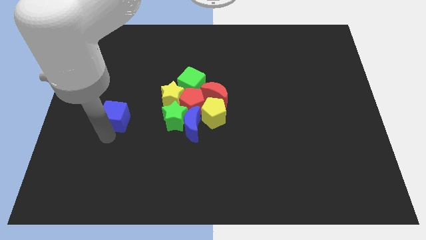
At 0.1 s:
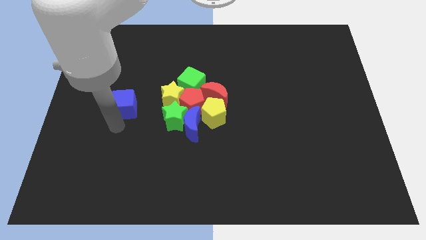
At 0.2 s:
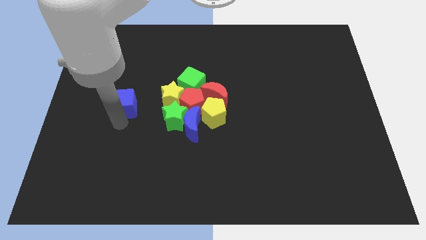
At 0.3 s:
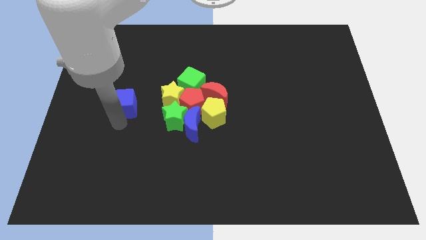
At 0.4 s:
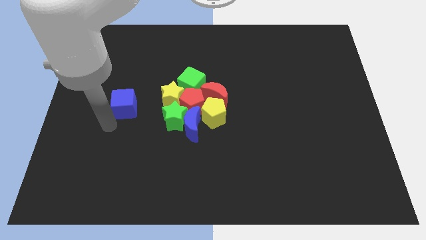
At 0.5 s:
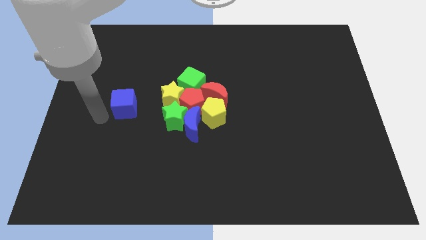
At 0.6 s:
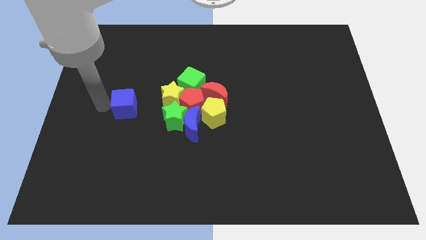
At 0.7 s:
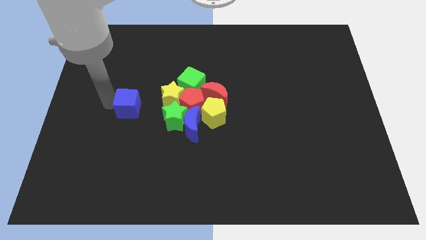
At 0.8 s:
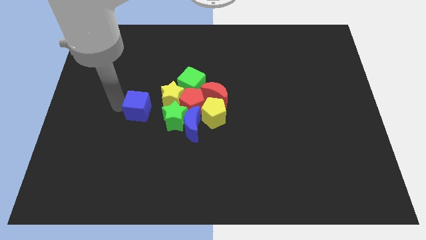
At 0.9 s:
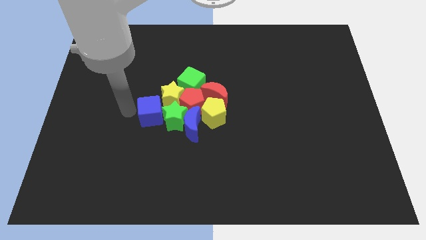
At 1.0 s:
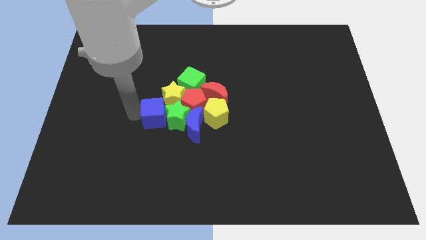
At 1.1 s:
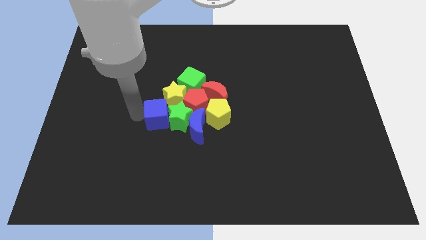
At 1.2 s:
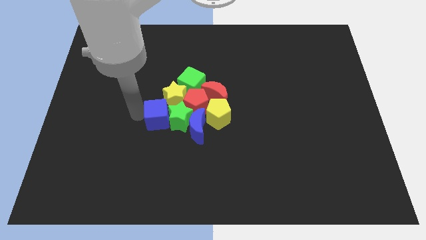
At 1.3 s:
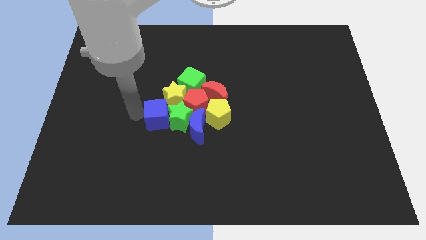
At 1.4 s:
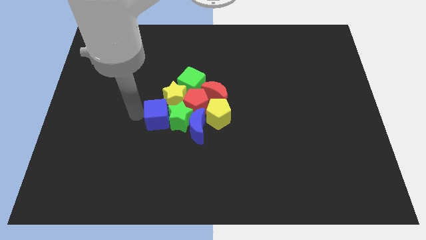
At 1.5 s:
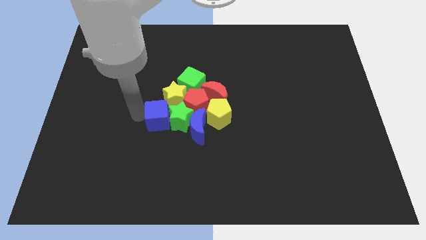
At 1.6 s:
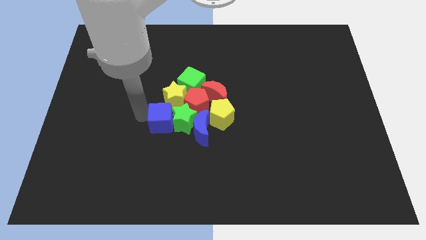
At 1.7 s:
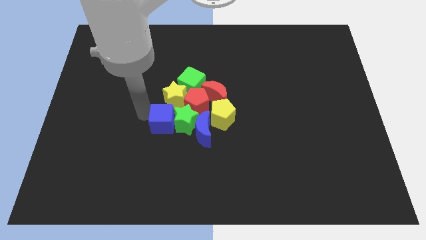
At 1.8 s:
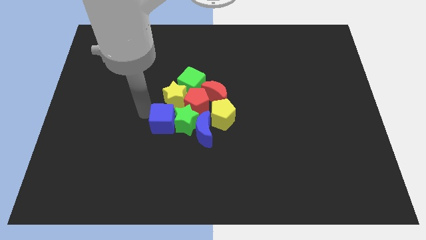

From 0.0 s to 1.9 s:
push the blue cube into the green star

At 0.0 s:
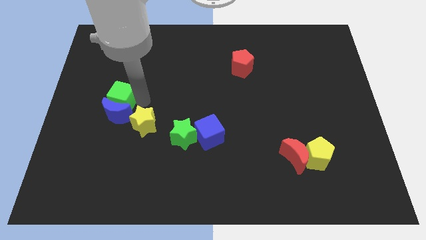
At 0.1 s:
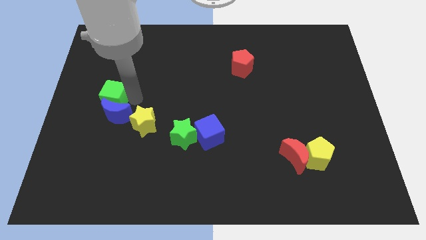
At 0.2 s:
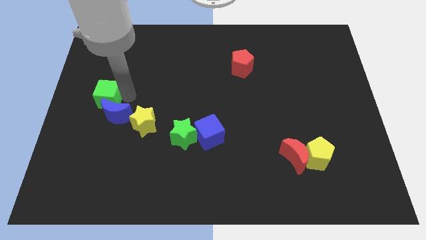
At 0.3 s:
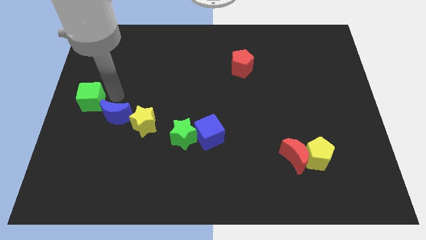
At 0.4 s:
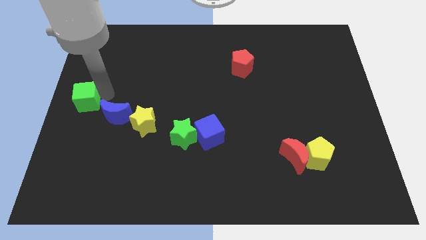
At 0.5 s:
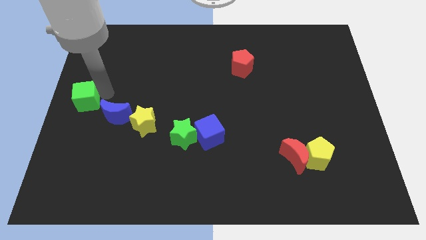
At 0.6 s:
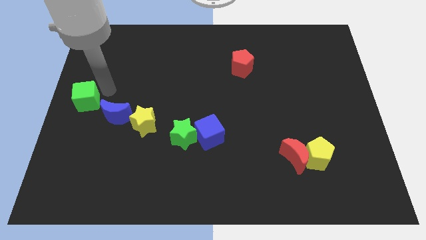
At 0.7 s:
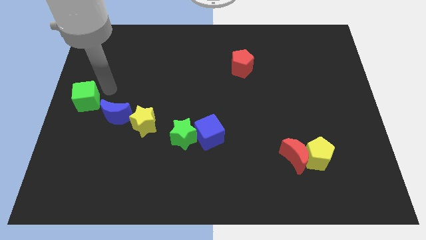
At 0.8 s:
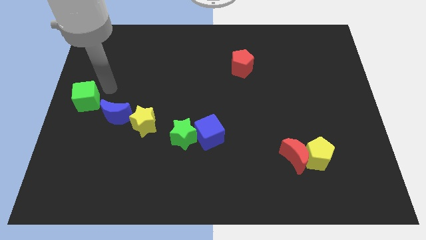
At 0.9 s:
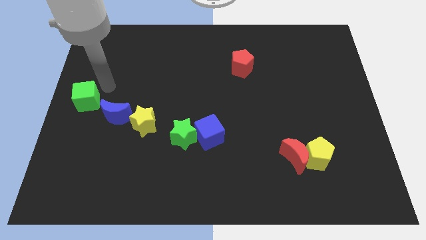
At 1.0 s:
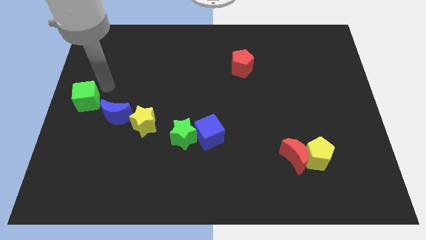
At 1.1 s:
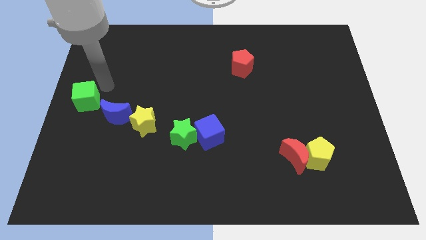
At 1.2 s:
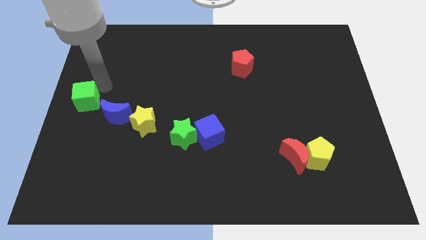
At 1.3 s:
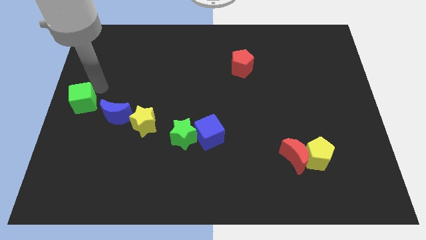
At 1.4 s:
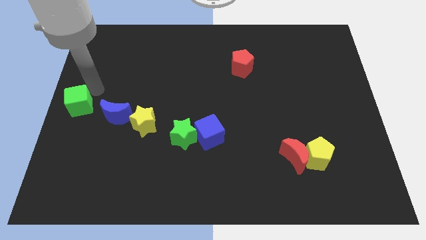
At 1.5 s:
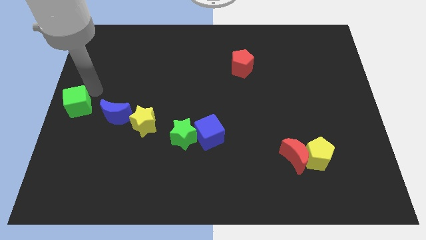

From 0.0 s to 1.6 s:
push the green cube to the center left of the board

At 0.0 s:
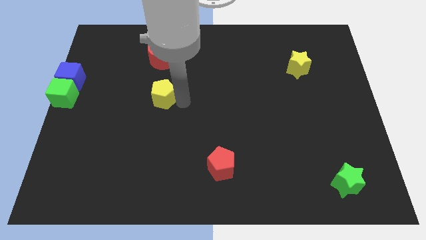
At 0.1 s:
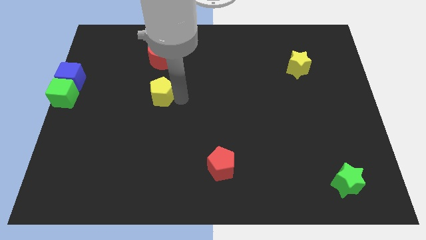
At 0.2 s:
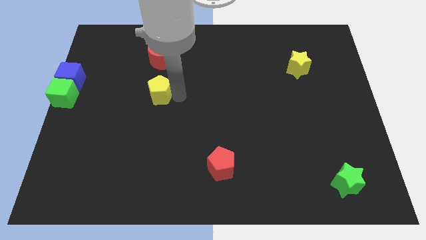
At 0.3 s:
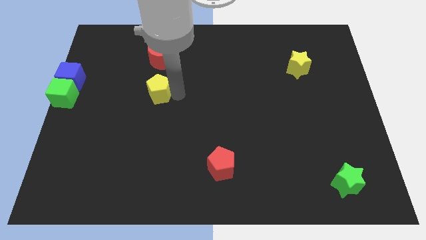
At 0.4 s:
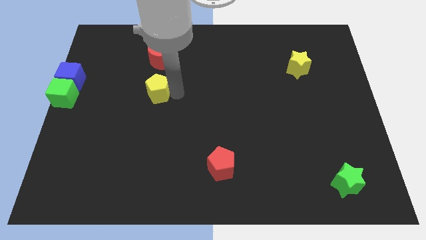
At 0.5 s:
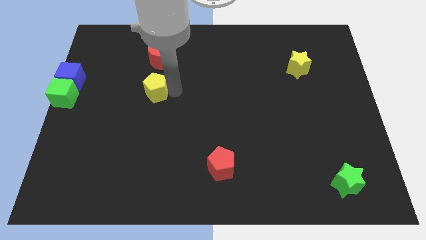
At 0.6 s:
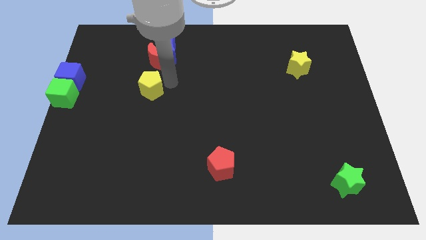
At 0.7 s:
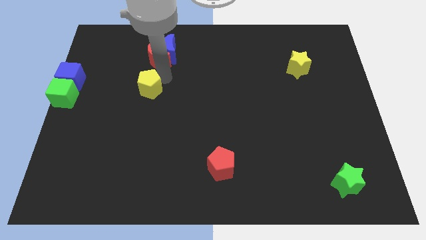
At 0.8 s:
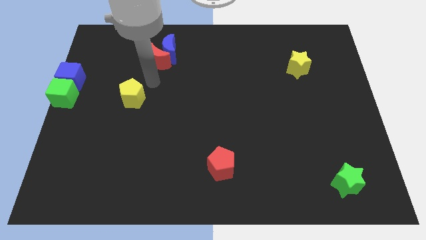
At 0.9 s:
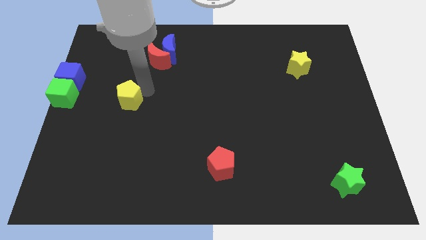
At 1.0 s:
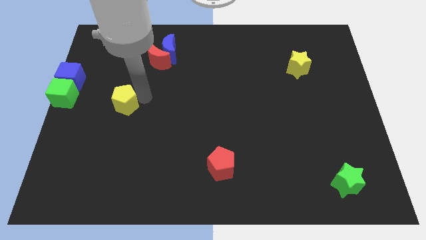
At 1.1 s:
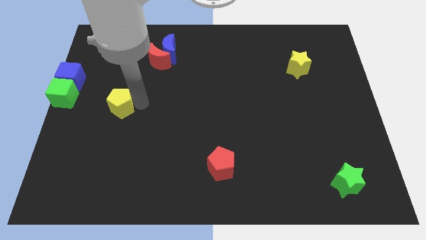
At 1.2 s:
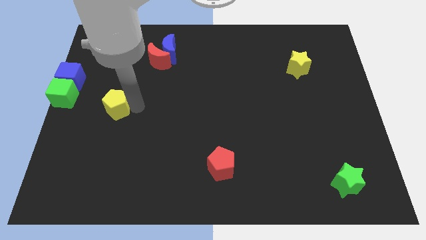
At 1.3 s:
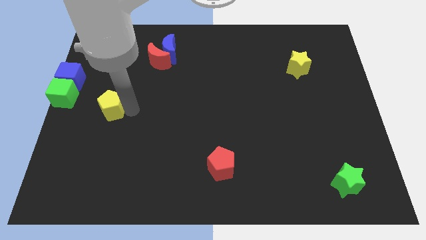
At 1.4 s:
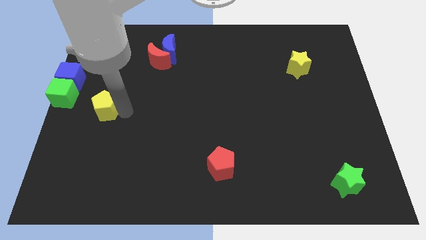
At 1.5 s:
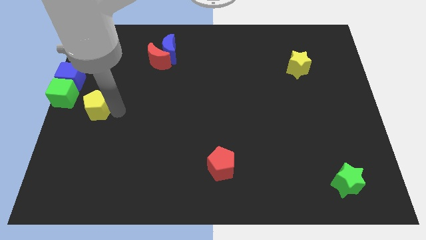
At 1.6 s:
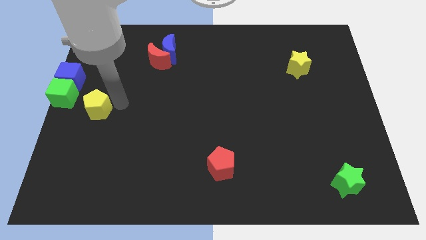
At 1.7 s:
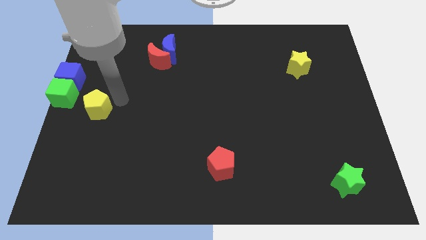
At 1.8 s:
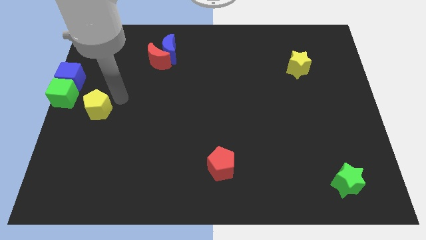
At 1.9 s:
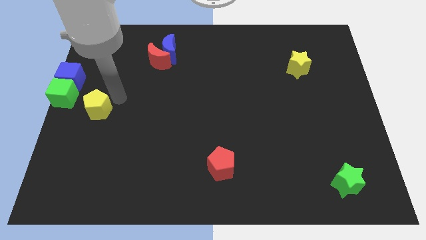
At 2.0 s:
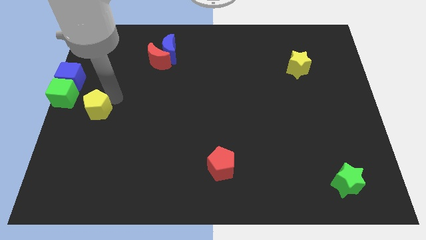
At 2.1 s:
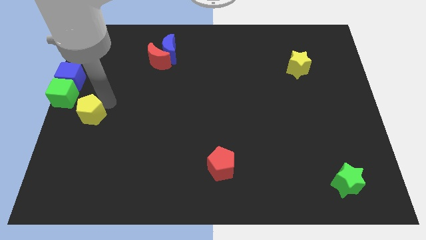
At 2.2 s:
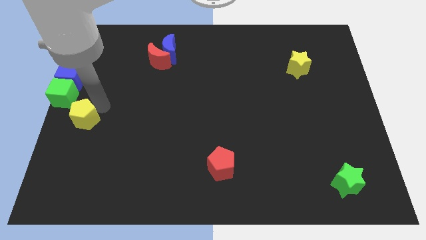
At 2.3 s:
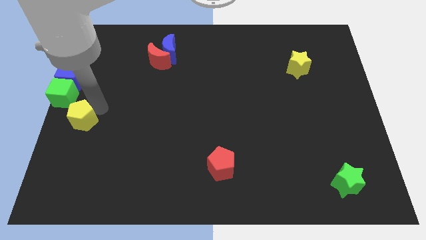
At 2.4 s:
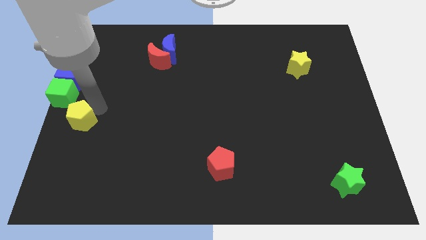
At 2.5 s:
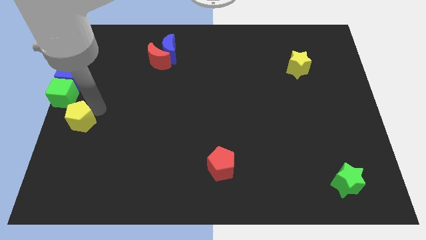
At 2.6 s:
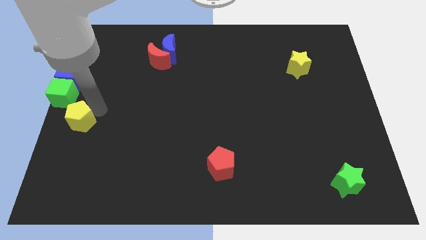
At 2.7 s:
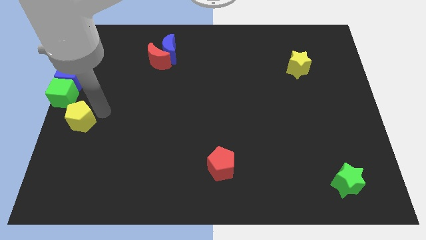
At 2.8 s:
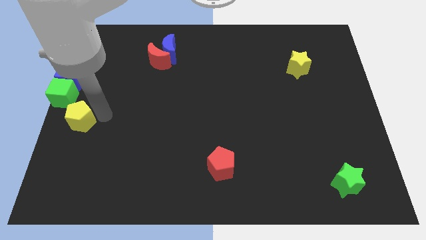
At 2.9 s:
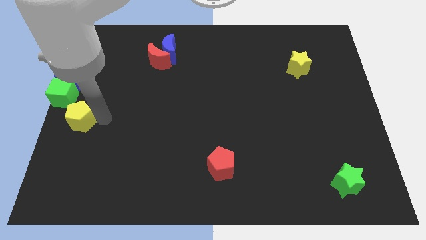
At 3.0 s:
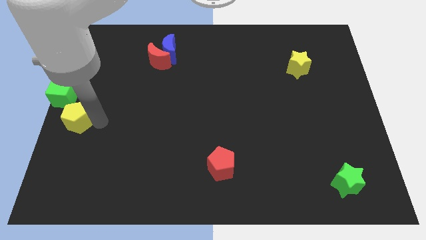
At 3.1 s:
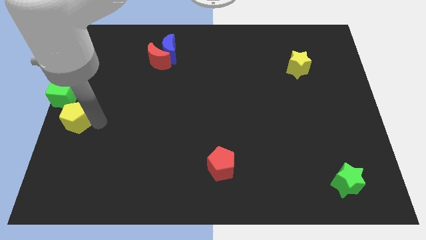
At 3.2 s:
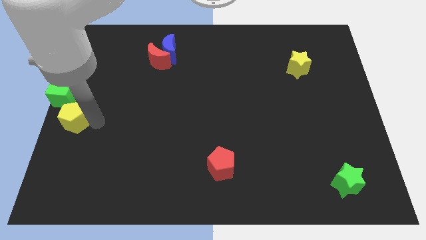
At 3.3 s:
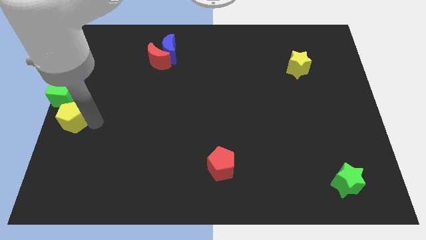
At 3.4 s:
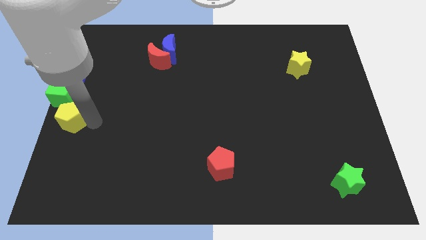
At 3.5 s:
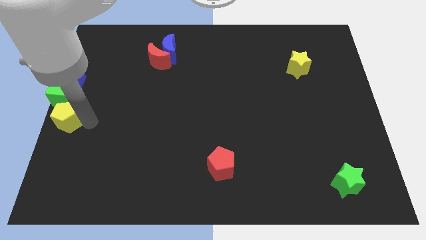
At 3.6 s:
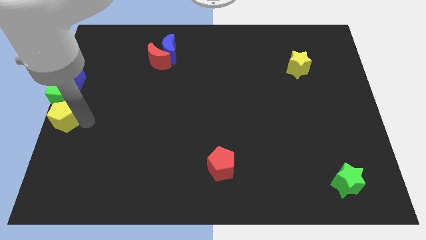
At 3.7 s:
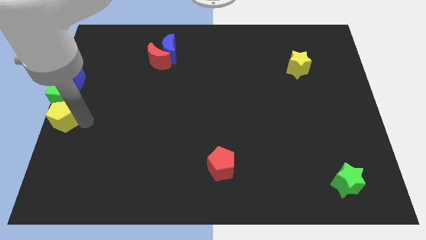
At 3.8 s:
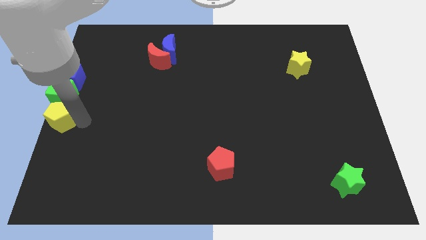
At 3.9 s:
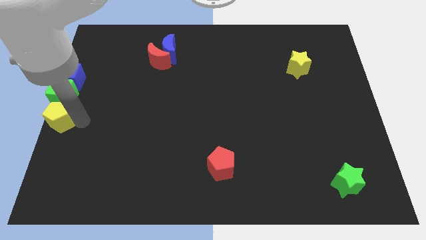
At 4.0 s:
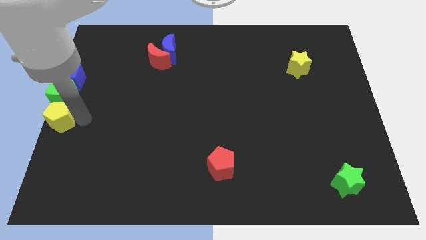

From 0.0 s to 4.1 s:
move the yellow pentagon to the bottom of green cube

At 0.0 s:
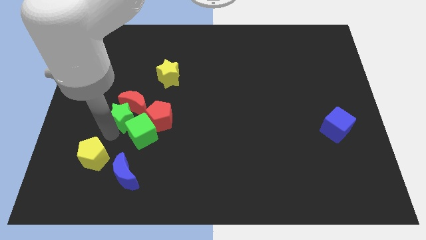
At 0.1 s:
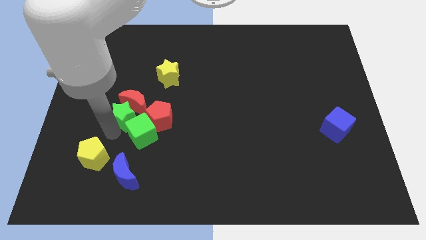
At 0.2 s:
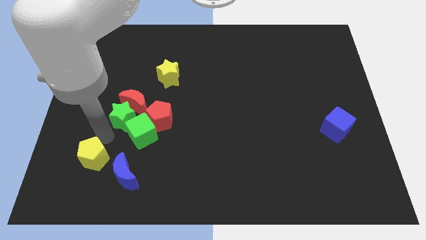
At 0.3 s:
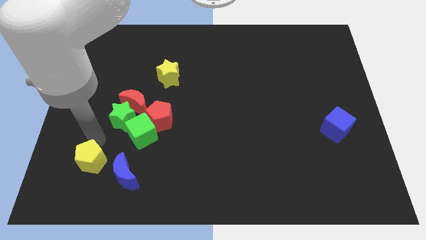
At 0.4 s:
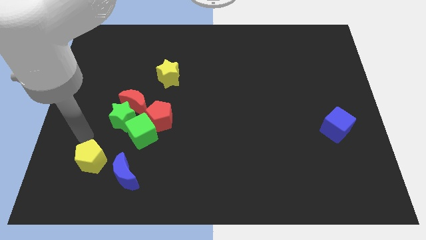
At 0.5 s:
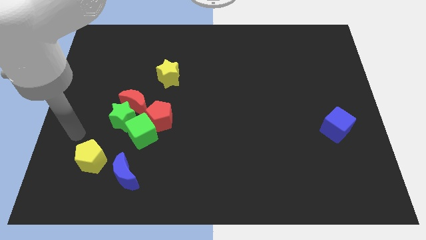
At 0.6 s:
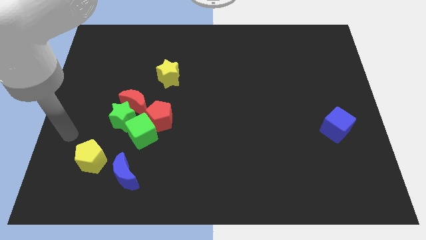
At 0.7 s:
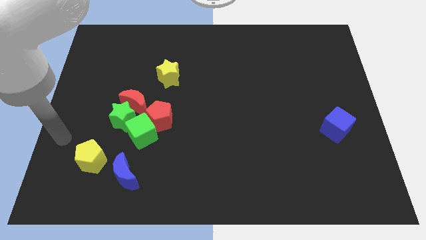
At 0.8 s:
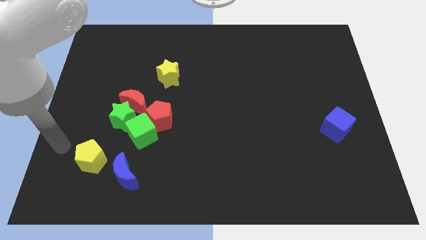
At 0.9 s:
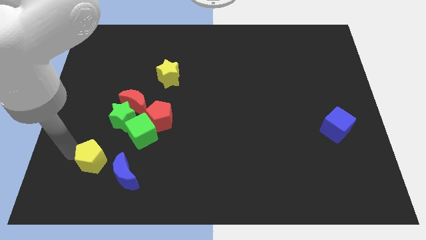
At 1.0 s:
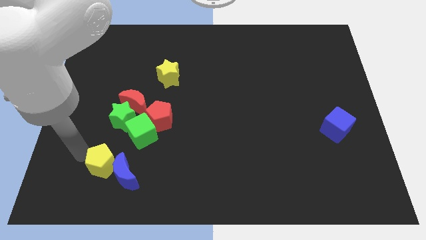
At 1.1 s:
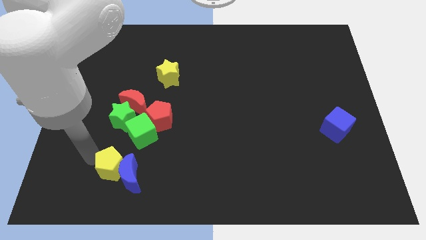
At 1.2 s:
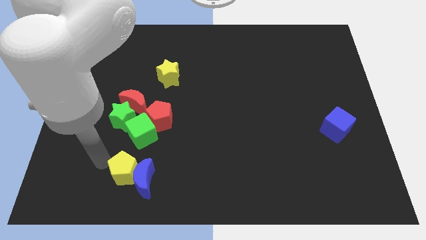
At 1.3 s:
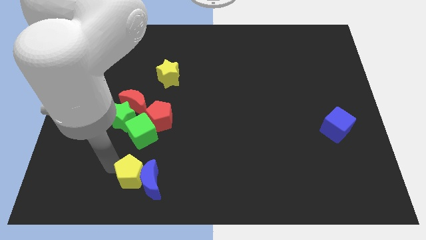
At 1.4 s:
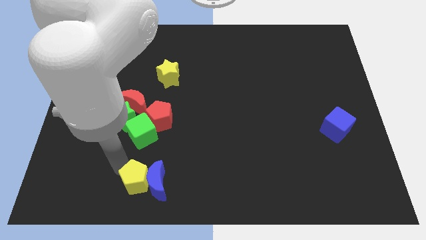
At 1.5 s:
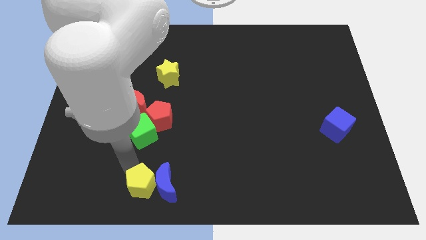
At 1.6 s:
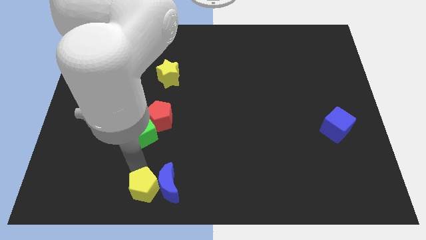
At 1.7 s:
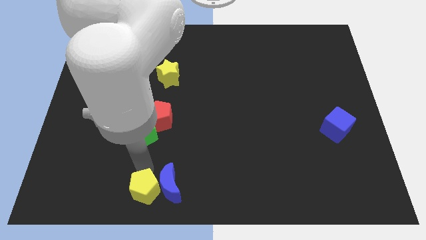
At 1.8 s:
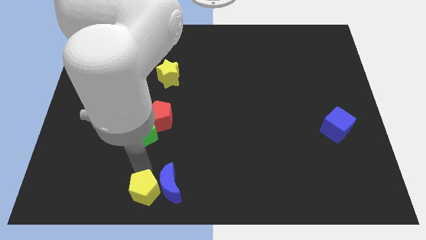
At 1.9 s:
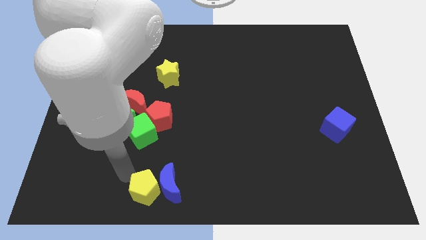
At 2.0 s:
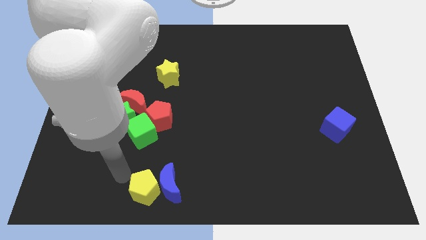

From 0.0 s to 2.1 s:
move the yellow pentagon and blue crescent together towards the bottom center
